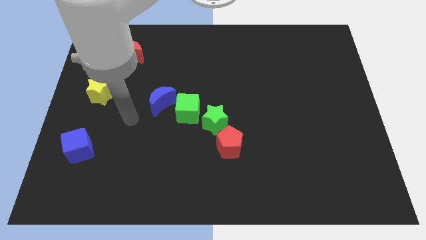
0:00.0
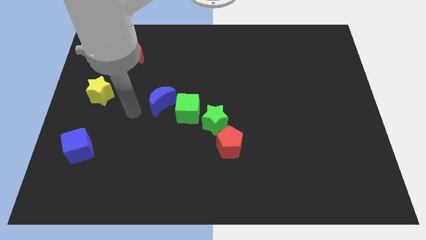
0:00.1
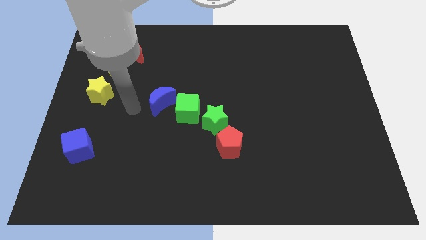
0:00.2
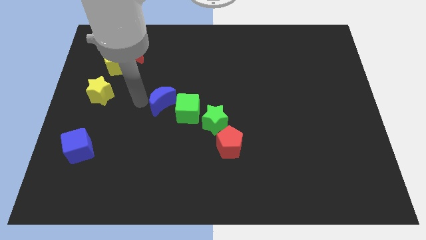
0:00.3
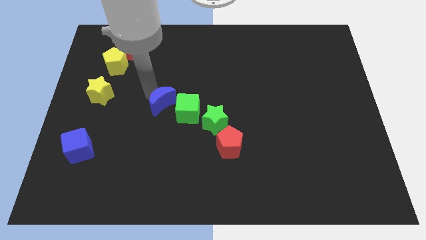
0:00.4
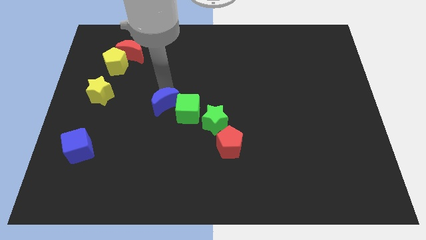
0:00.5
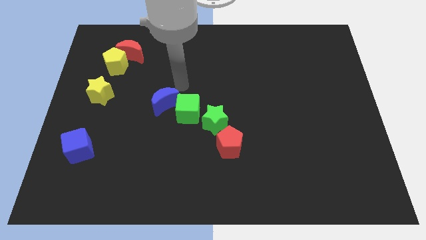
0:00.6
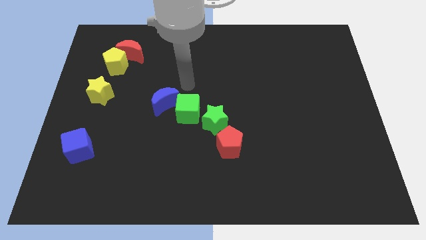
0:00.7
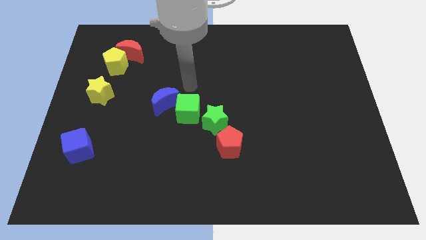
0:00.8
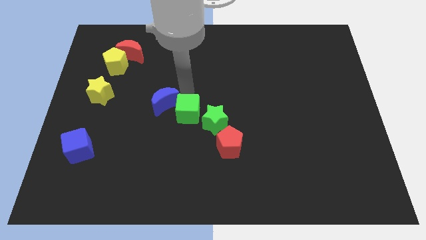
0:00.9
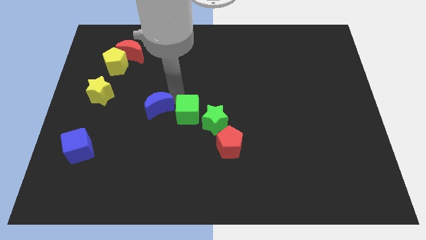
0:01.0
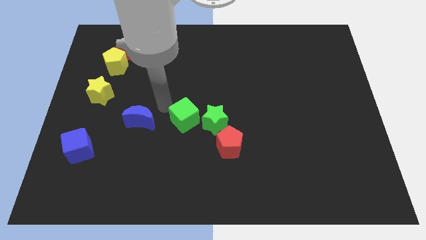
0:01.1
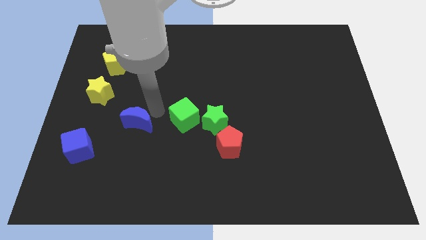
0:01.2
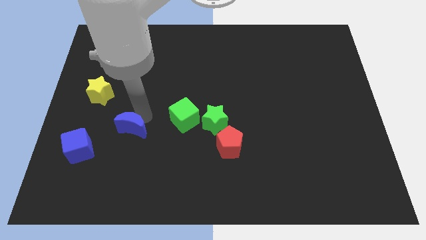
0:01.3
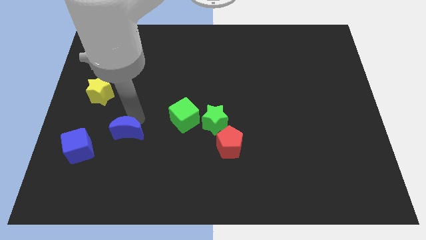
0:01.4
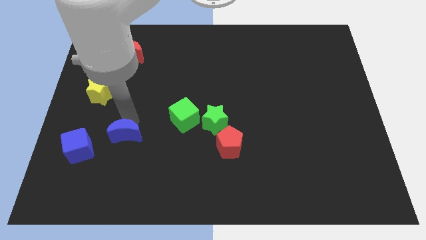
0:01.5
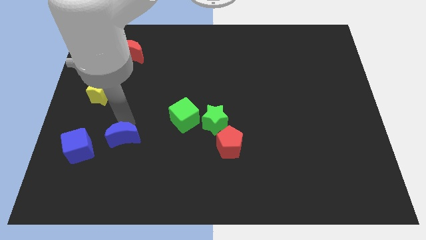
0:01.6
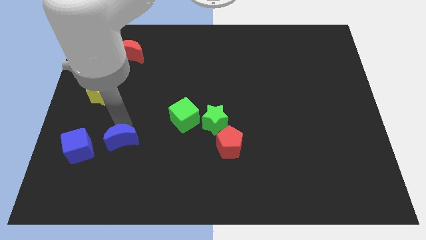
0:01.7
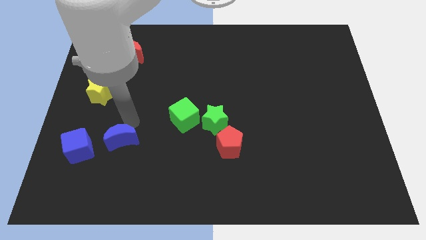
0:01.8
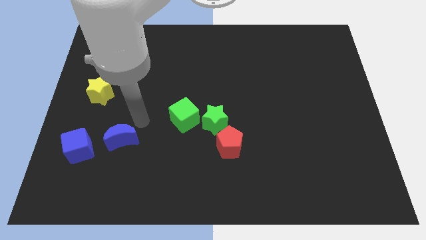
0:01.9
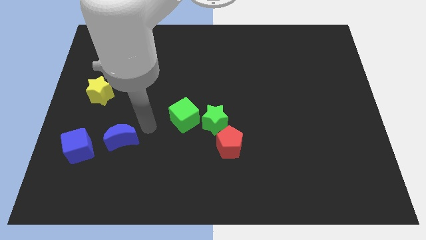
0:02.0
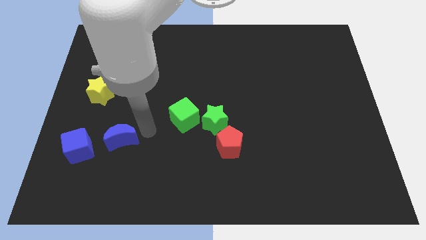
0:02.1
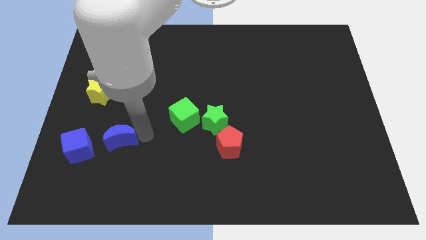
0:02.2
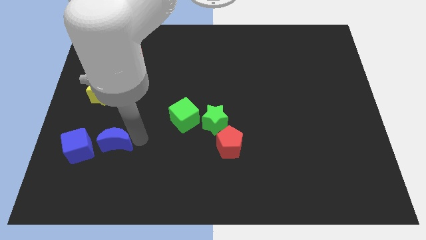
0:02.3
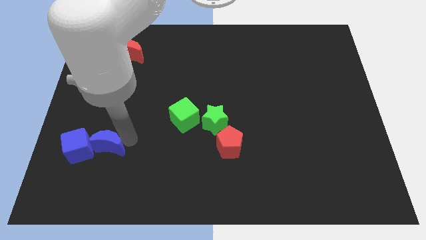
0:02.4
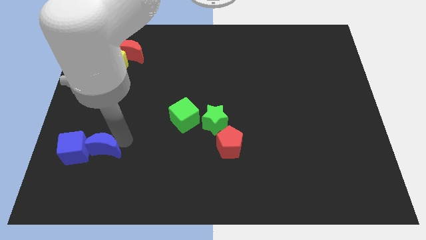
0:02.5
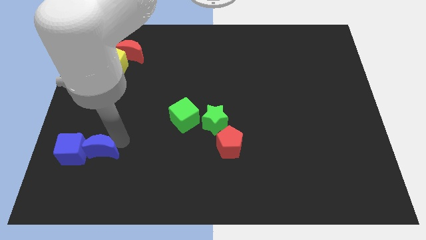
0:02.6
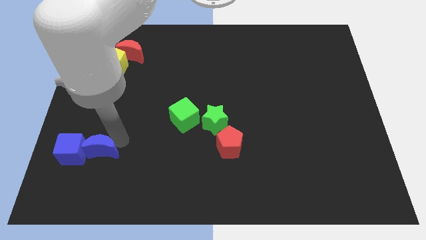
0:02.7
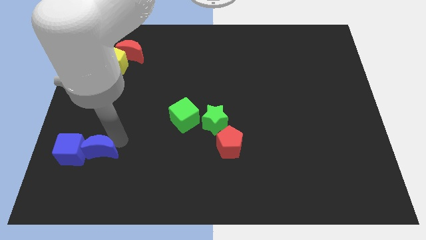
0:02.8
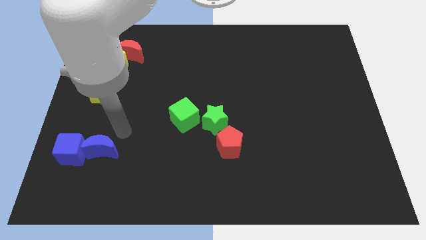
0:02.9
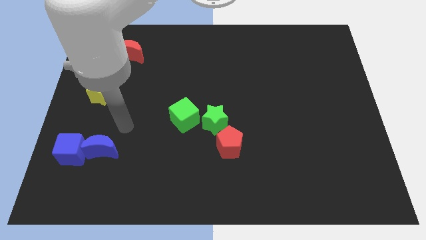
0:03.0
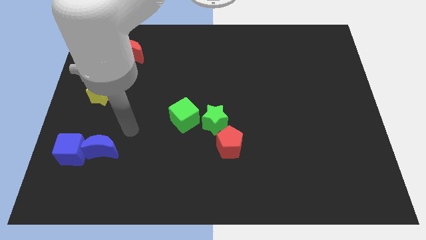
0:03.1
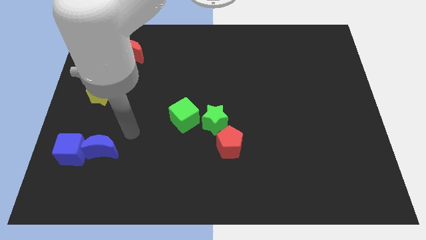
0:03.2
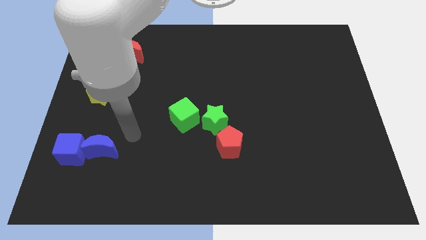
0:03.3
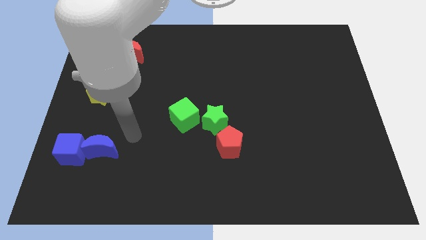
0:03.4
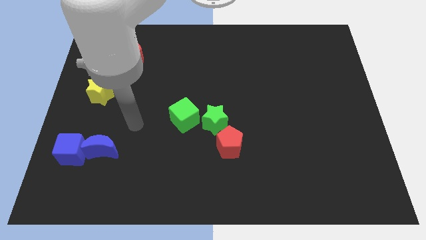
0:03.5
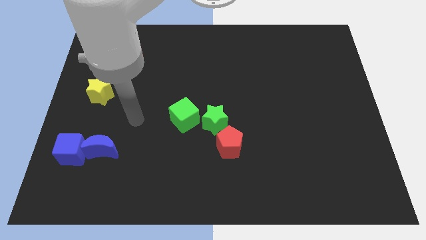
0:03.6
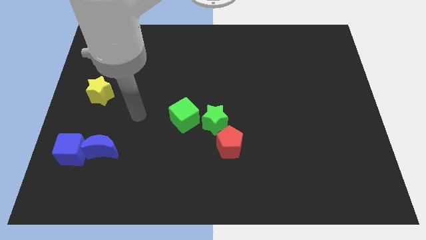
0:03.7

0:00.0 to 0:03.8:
push the blue crescent into the blue cube

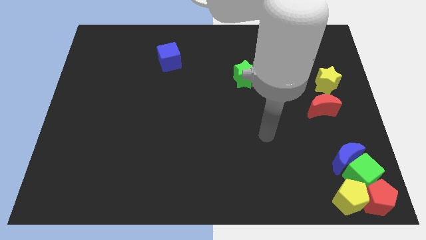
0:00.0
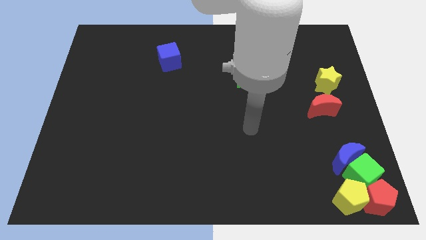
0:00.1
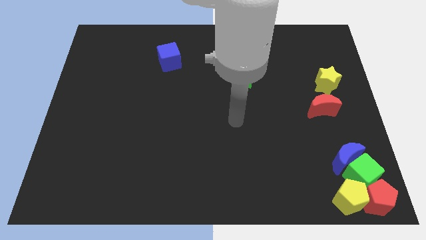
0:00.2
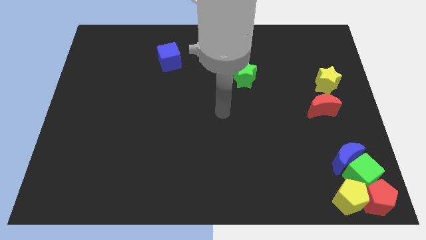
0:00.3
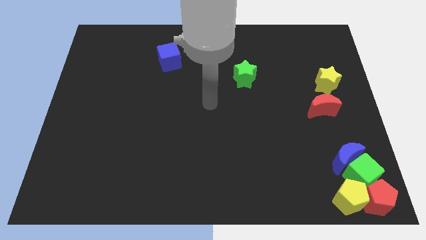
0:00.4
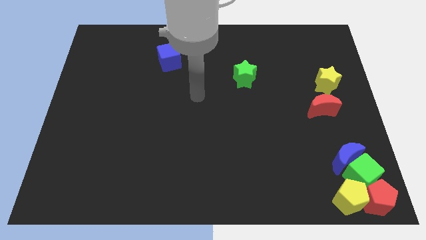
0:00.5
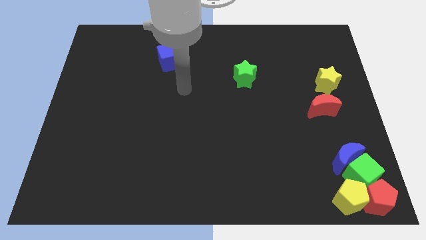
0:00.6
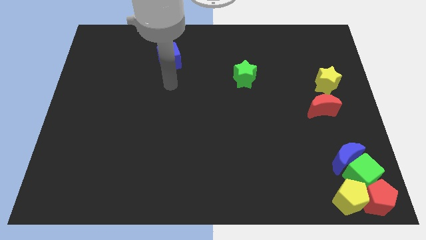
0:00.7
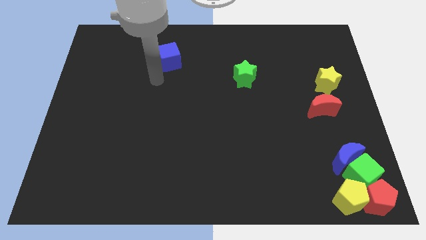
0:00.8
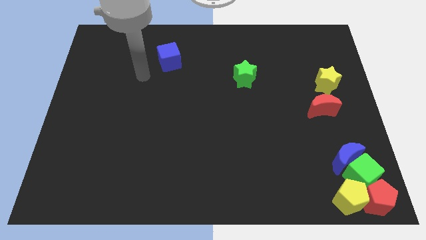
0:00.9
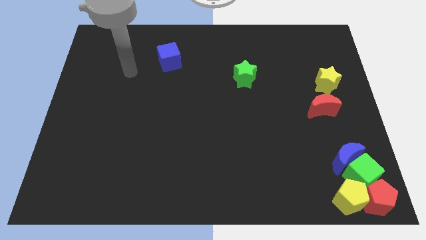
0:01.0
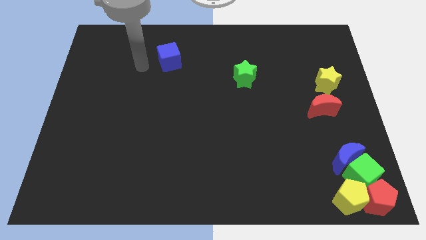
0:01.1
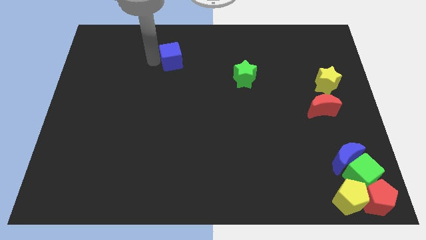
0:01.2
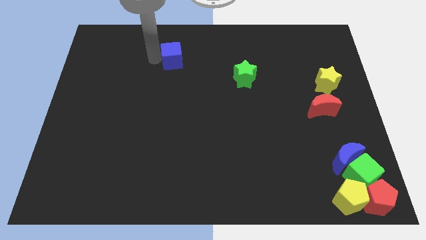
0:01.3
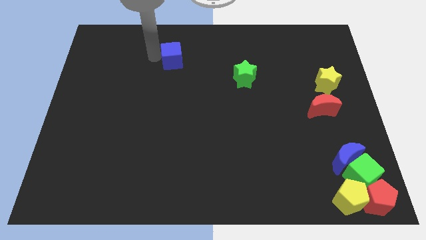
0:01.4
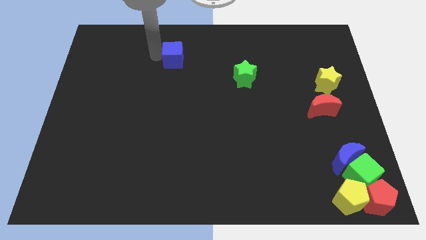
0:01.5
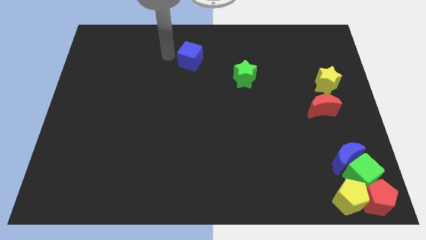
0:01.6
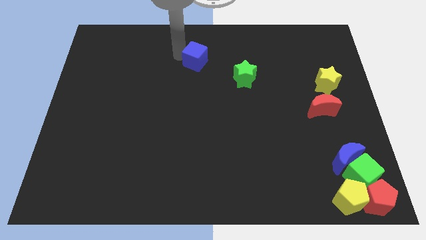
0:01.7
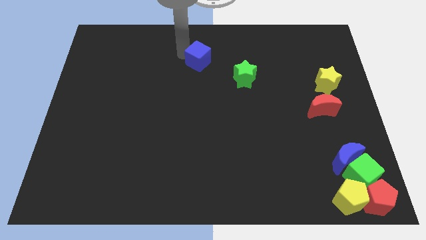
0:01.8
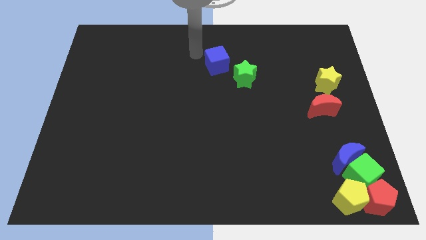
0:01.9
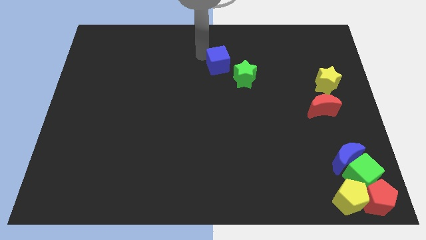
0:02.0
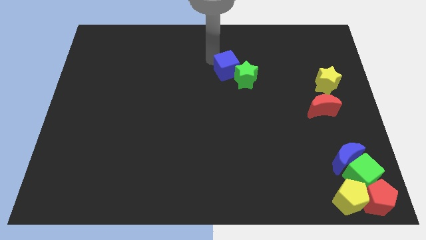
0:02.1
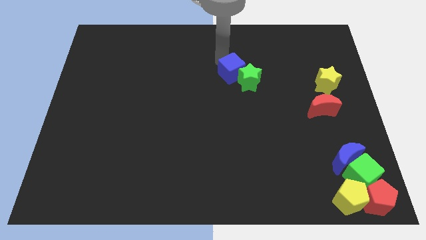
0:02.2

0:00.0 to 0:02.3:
push the blue cube into the green star

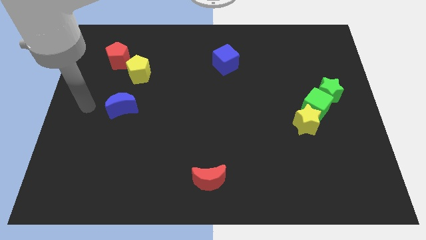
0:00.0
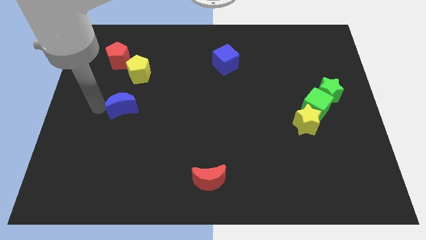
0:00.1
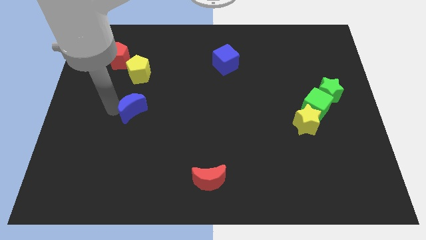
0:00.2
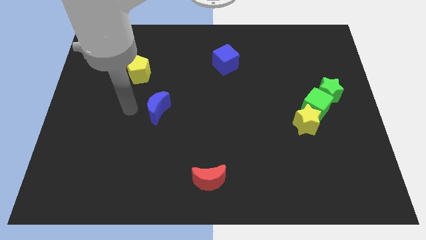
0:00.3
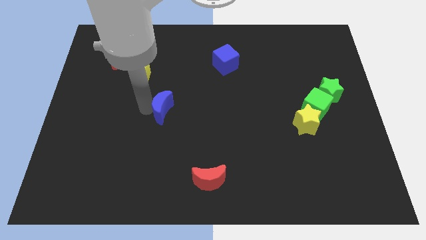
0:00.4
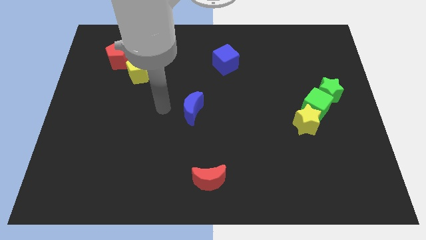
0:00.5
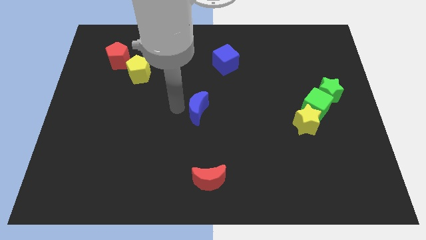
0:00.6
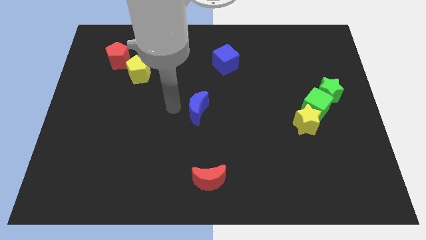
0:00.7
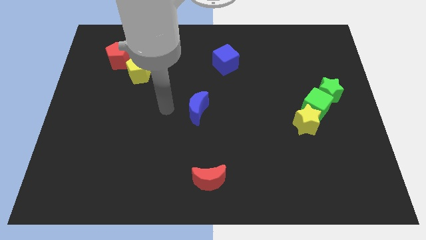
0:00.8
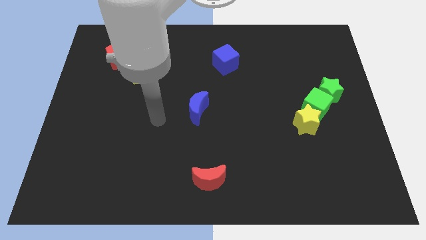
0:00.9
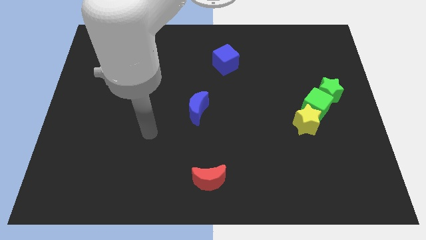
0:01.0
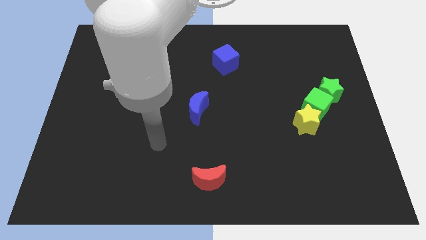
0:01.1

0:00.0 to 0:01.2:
place the blue crescent to the center

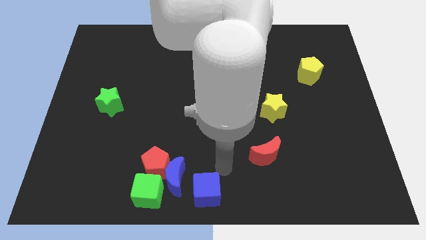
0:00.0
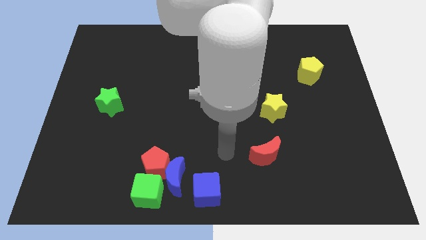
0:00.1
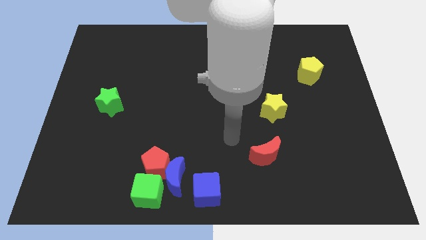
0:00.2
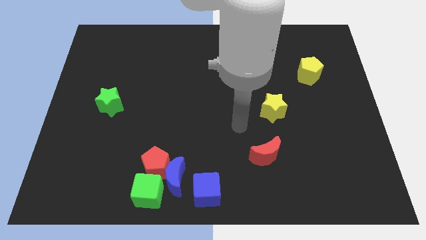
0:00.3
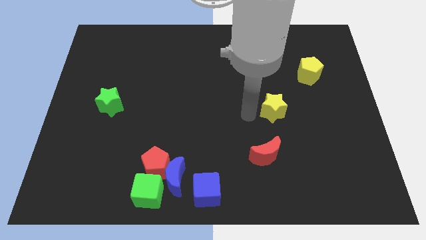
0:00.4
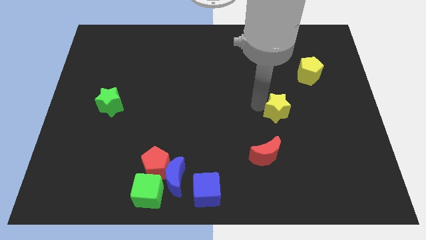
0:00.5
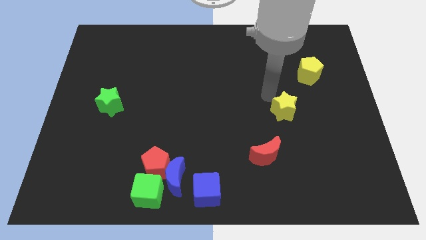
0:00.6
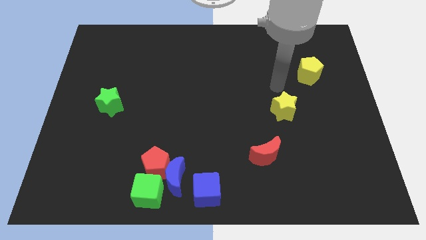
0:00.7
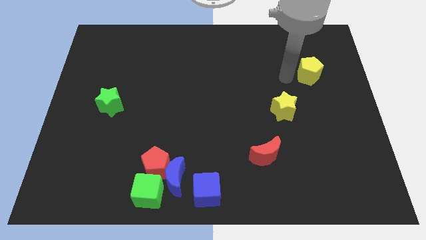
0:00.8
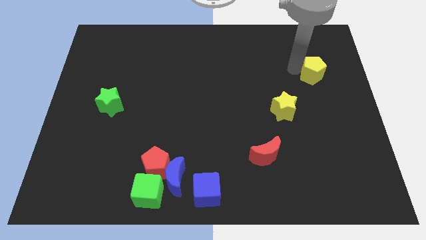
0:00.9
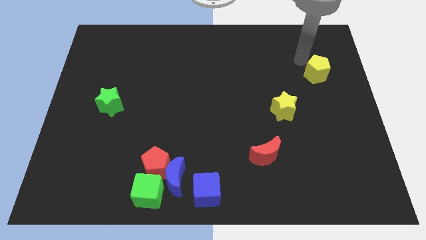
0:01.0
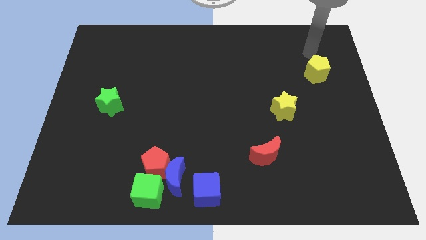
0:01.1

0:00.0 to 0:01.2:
point your arm close to yellow pentagon

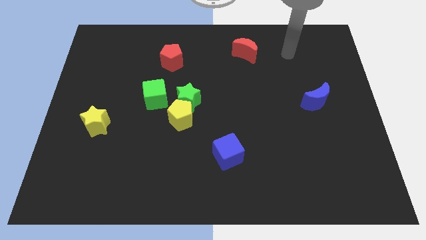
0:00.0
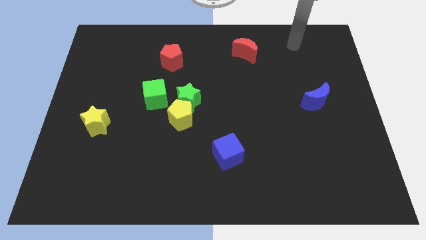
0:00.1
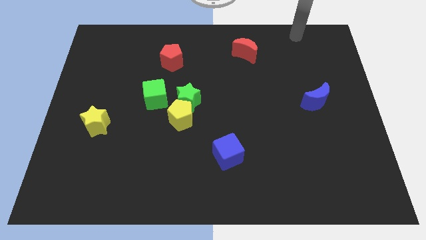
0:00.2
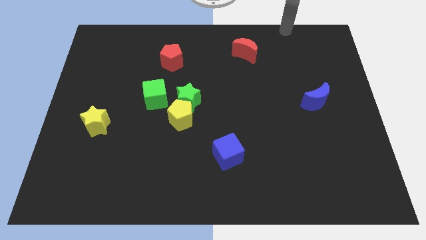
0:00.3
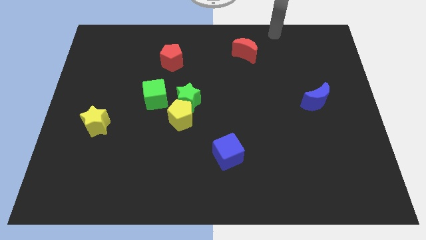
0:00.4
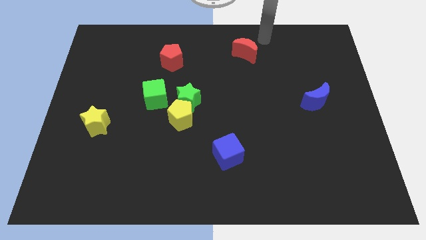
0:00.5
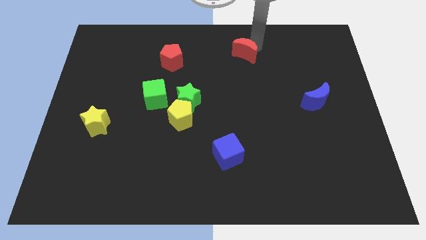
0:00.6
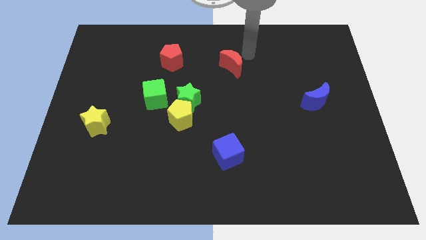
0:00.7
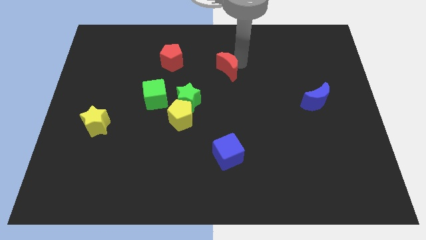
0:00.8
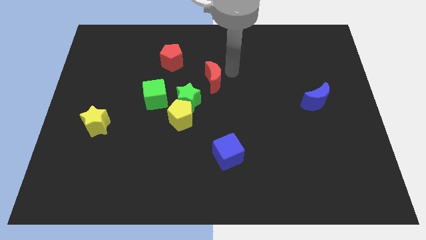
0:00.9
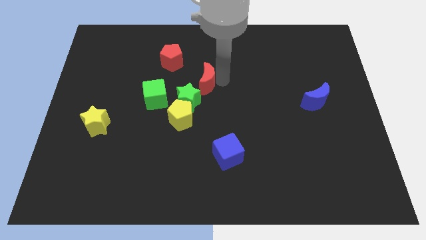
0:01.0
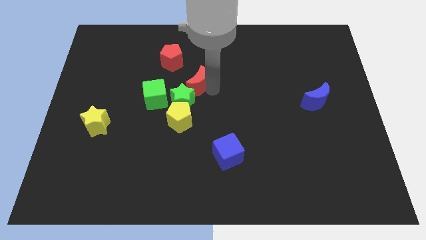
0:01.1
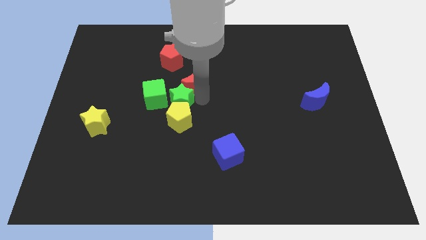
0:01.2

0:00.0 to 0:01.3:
place red moon to the top of green star
